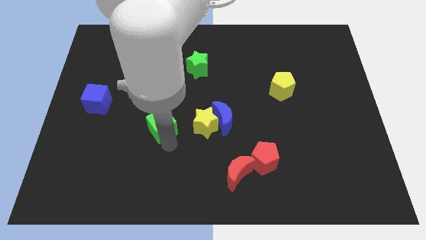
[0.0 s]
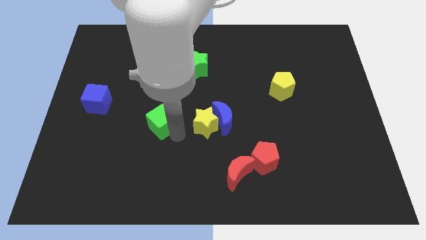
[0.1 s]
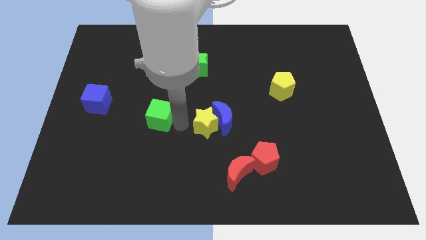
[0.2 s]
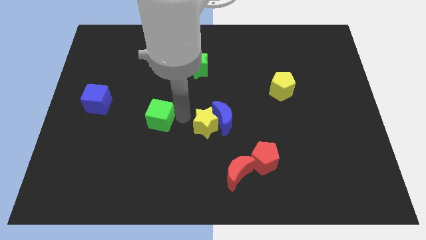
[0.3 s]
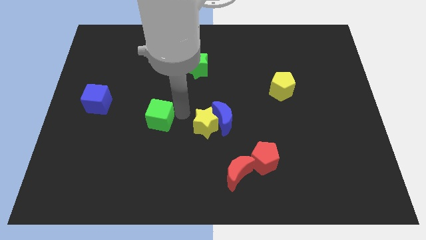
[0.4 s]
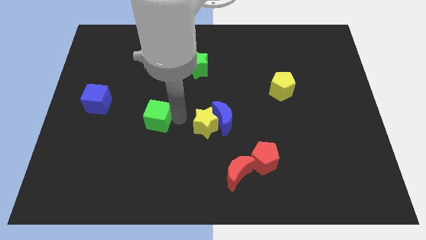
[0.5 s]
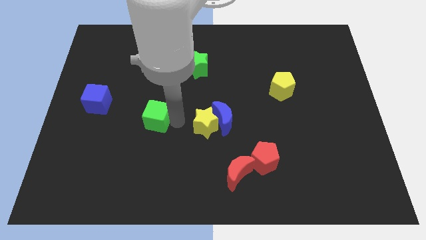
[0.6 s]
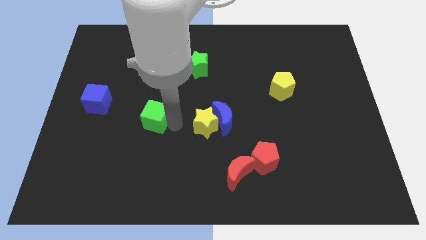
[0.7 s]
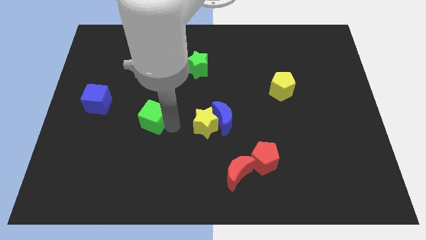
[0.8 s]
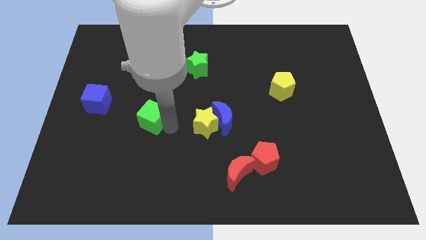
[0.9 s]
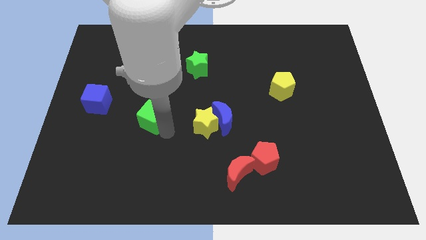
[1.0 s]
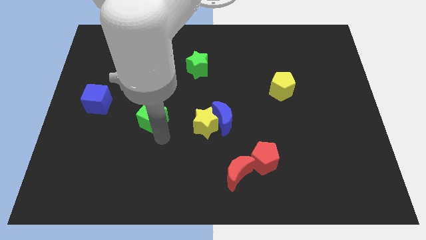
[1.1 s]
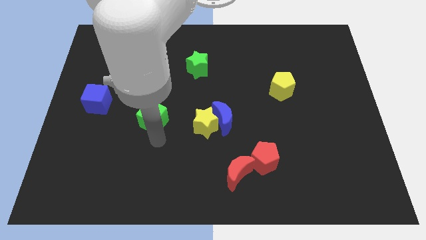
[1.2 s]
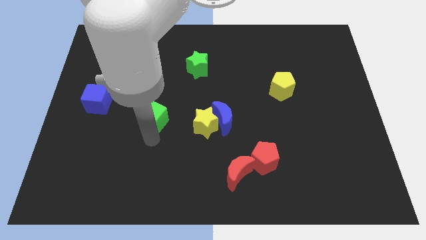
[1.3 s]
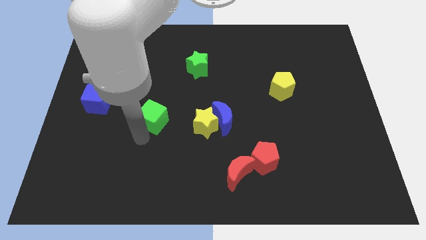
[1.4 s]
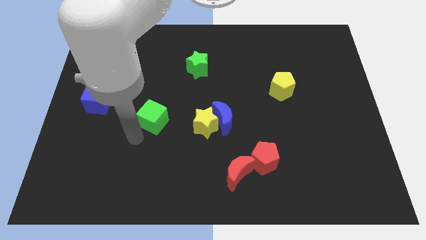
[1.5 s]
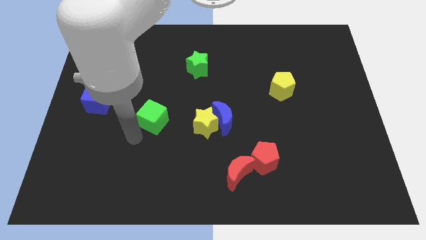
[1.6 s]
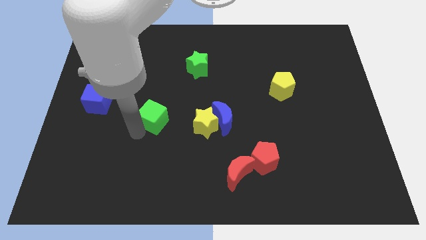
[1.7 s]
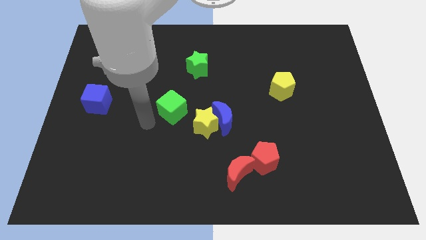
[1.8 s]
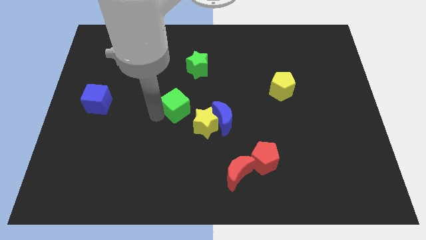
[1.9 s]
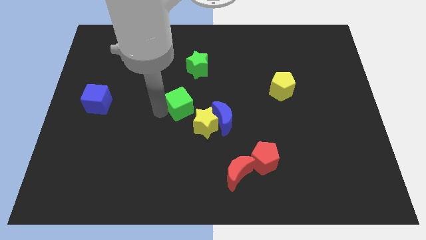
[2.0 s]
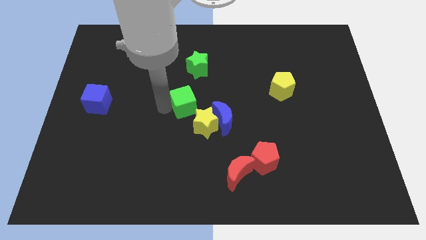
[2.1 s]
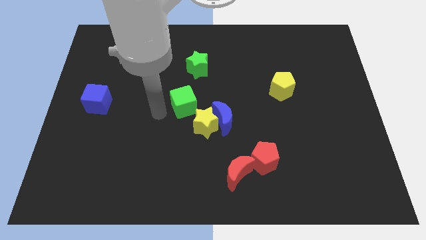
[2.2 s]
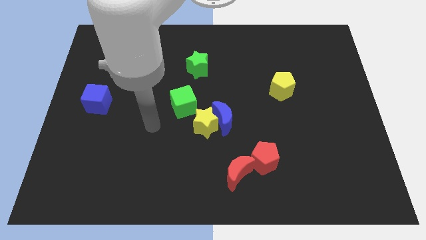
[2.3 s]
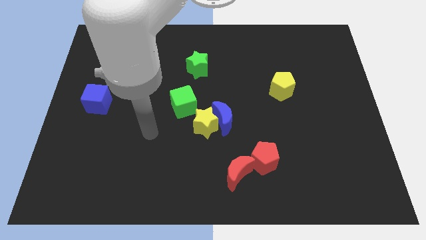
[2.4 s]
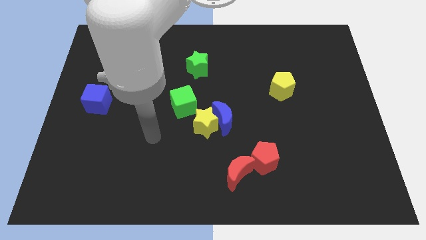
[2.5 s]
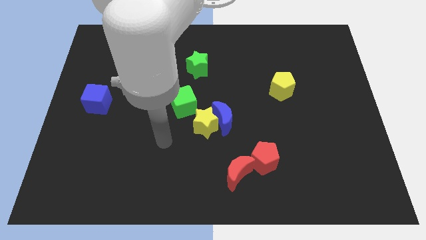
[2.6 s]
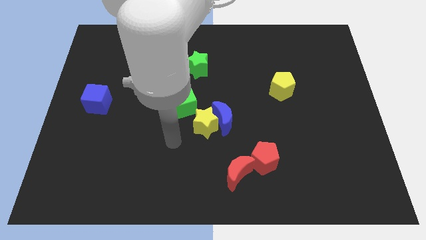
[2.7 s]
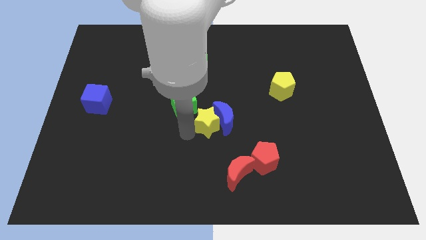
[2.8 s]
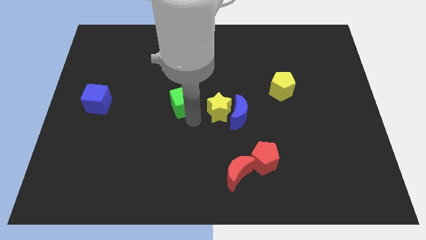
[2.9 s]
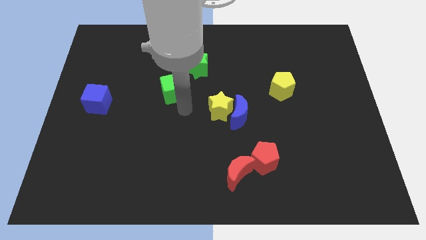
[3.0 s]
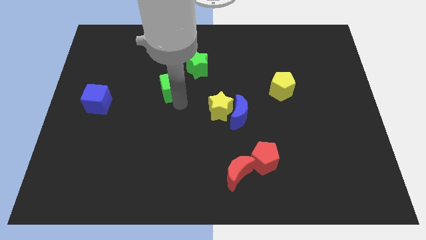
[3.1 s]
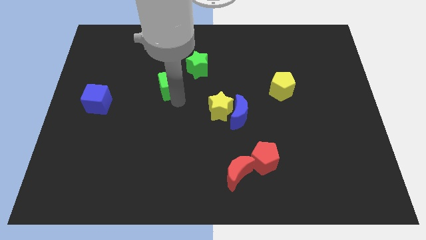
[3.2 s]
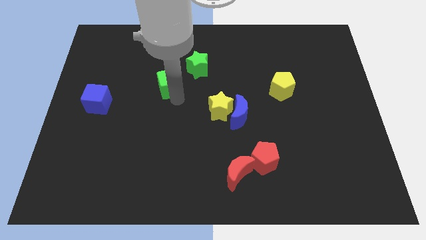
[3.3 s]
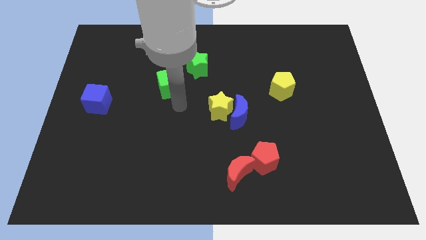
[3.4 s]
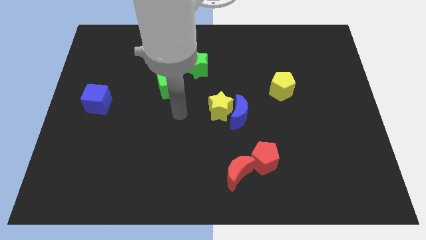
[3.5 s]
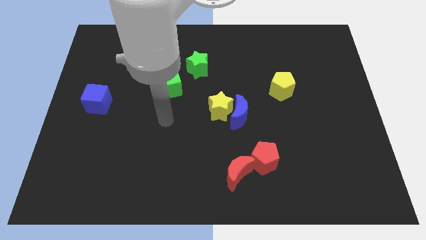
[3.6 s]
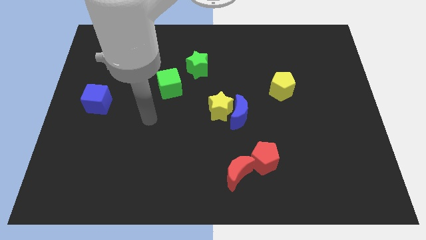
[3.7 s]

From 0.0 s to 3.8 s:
make a triangle out of green blocks and the yellow star

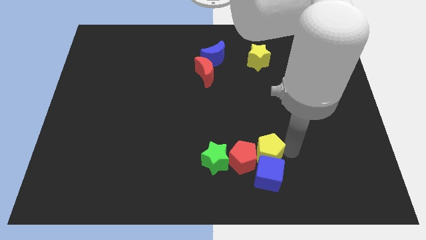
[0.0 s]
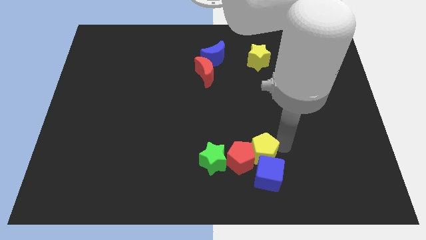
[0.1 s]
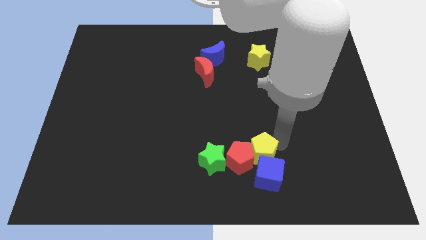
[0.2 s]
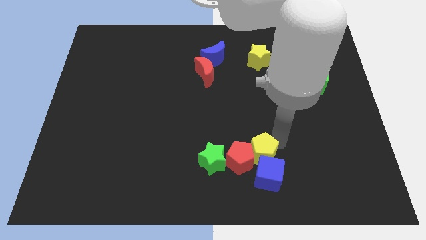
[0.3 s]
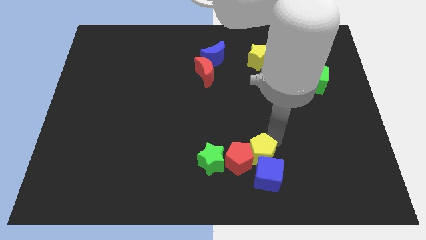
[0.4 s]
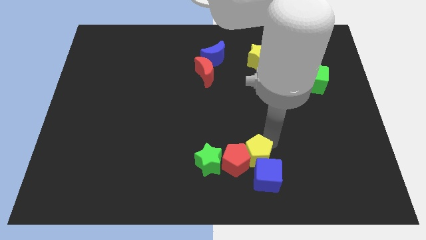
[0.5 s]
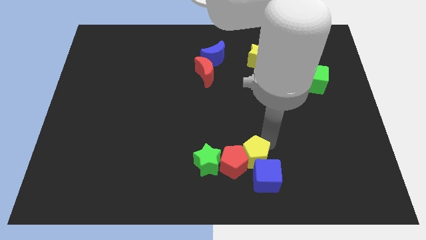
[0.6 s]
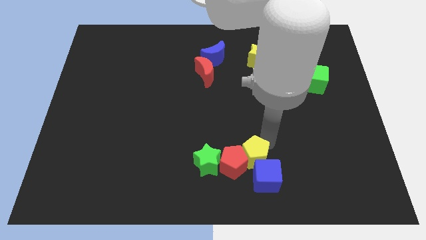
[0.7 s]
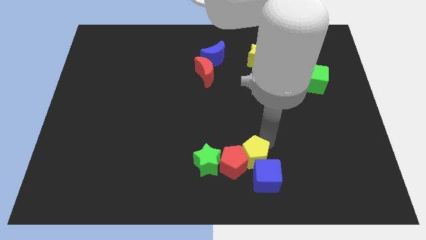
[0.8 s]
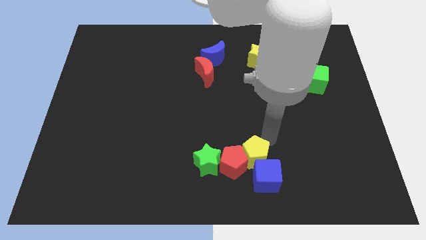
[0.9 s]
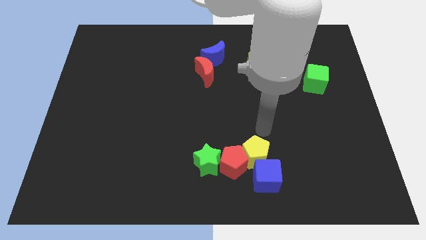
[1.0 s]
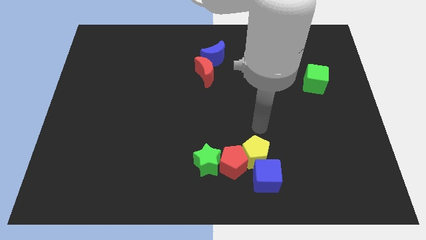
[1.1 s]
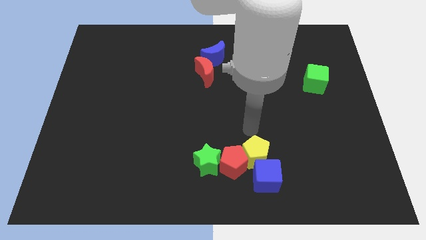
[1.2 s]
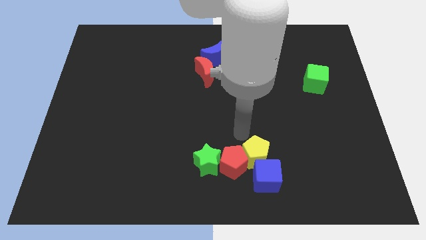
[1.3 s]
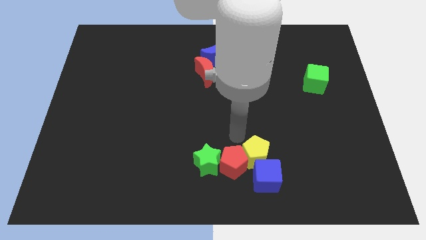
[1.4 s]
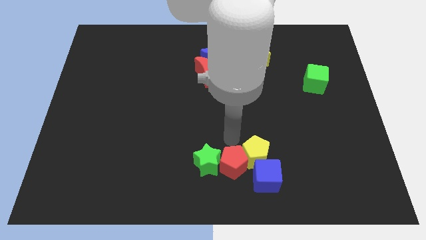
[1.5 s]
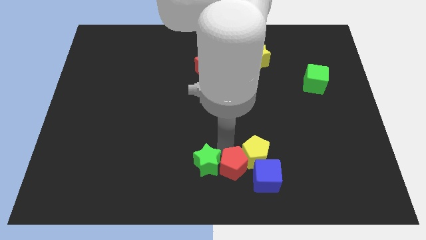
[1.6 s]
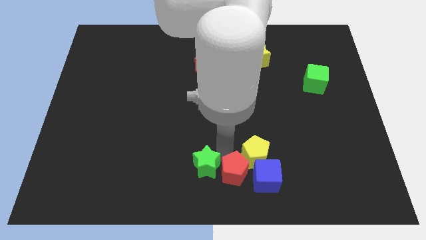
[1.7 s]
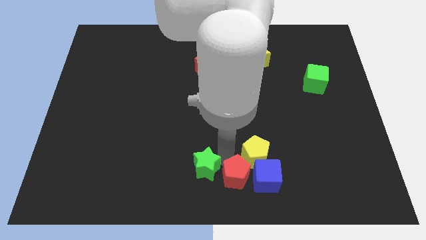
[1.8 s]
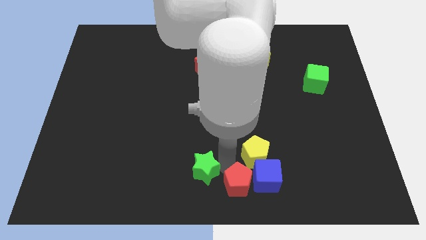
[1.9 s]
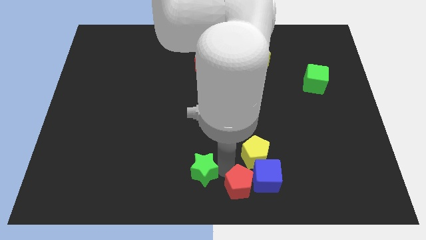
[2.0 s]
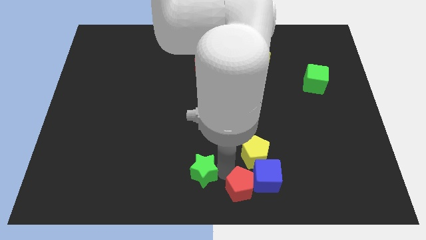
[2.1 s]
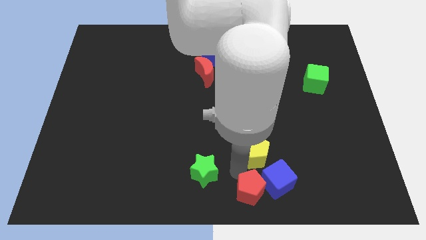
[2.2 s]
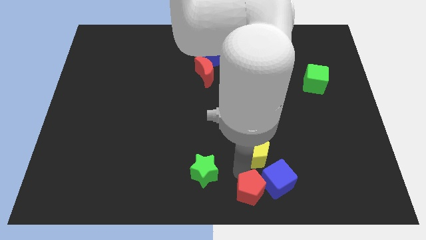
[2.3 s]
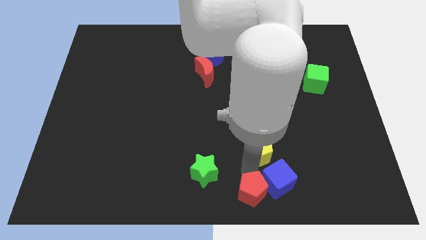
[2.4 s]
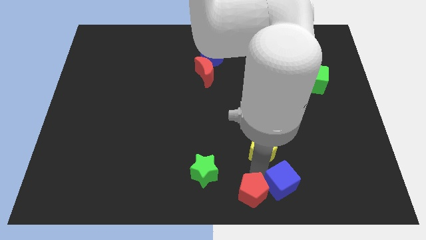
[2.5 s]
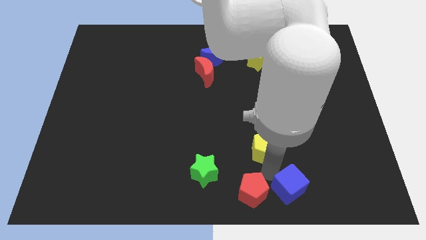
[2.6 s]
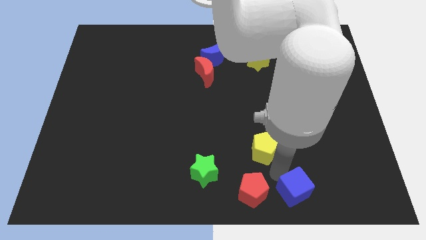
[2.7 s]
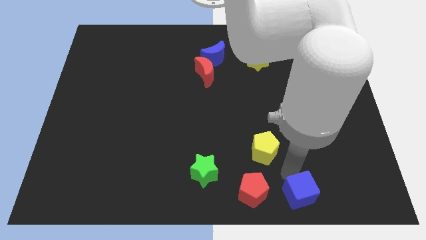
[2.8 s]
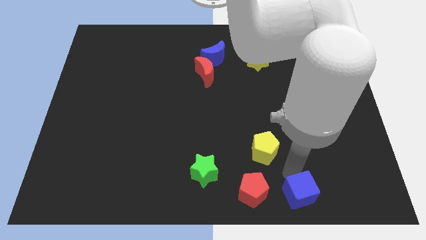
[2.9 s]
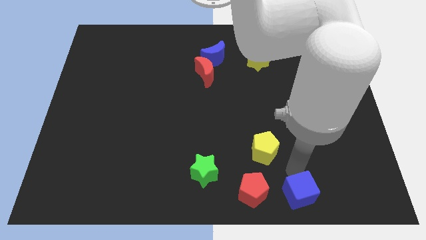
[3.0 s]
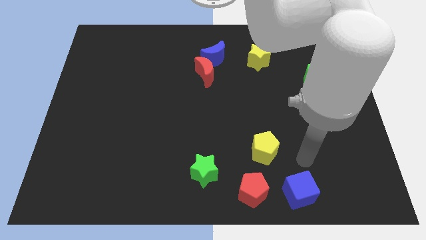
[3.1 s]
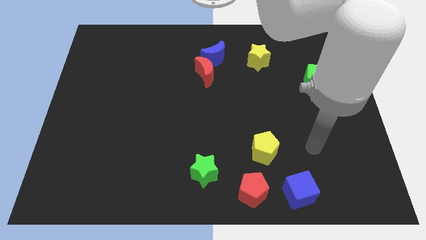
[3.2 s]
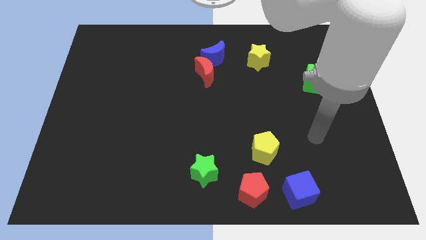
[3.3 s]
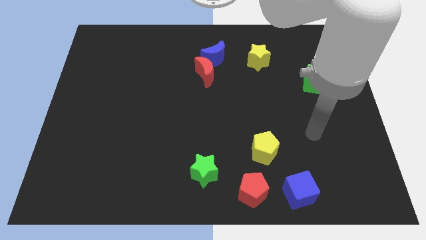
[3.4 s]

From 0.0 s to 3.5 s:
separate the red pentagon from green star and yellow pentagon

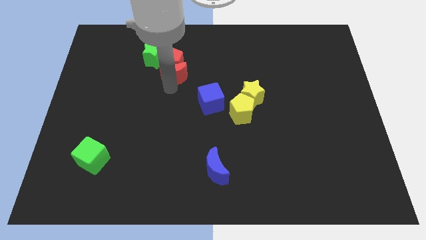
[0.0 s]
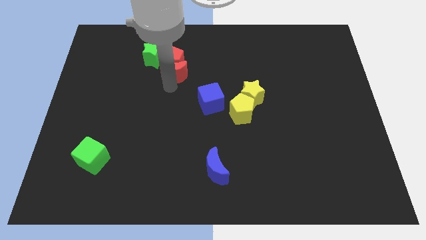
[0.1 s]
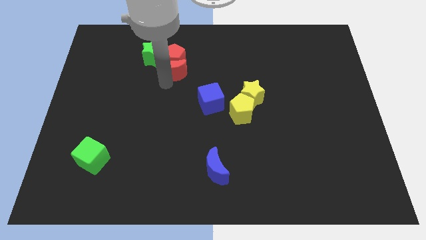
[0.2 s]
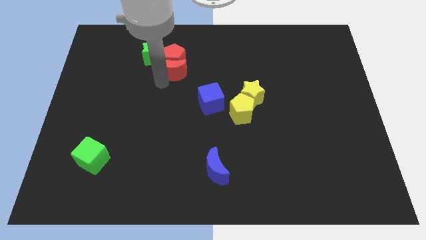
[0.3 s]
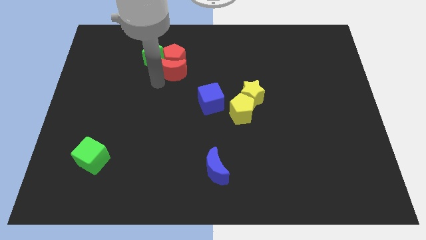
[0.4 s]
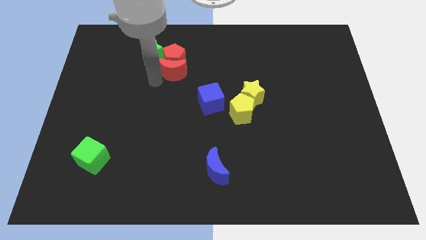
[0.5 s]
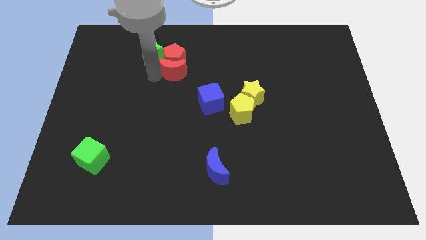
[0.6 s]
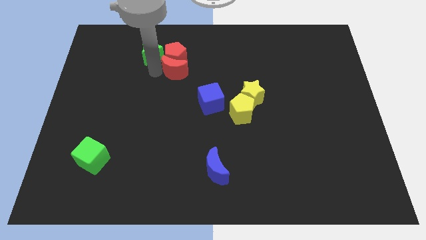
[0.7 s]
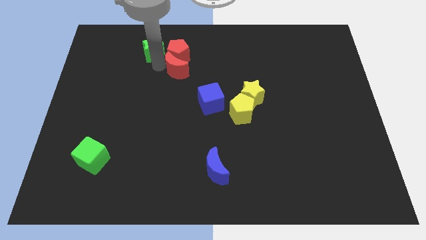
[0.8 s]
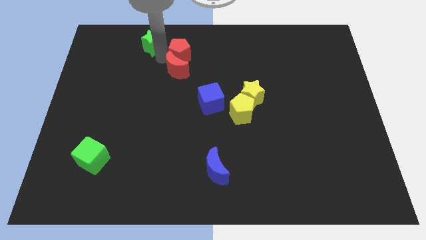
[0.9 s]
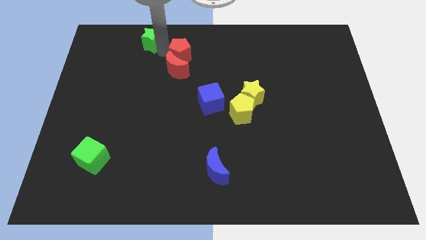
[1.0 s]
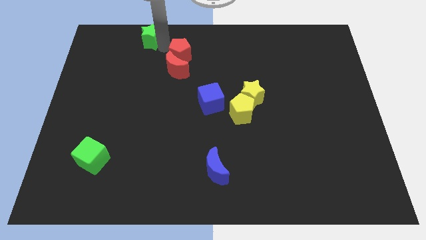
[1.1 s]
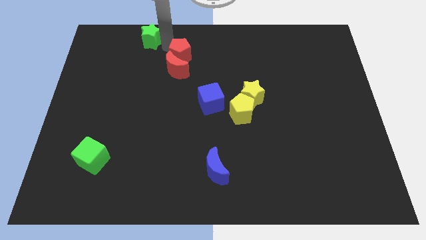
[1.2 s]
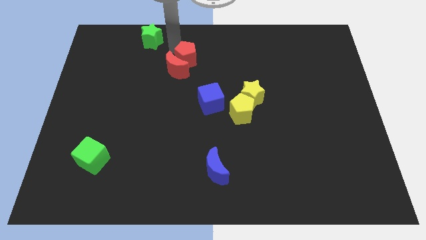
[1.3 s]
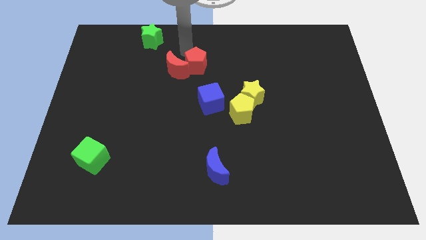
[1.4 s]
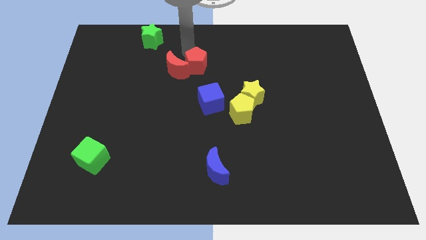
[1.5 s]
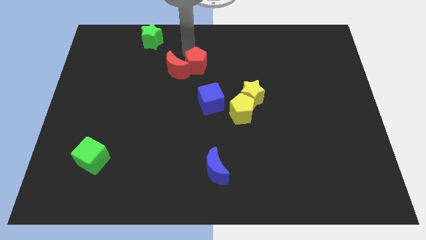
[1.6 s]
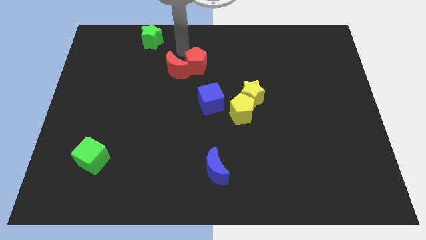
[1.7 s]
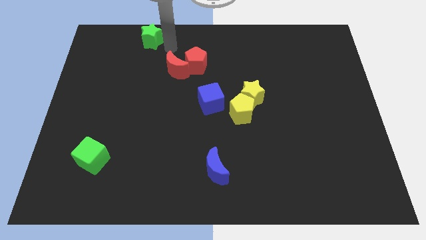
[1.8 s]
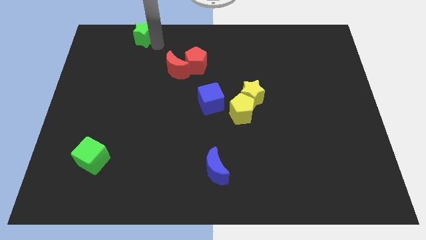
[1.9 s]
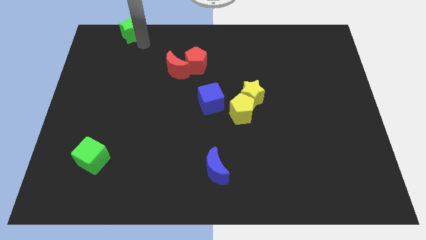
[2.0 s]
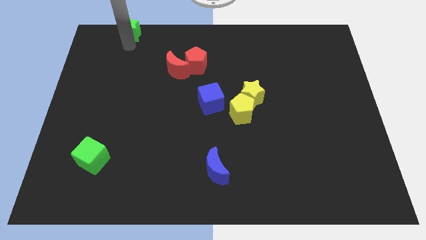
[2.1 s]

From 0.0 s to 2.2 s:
separate the red blocks away from the green star
